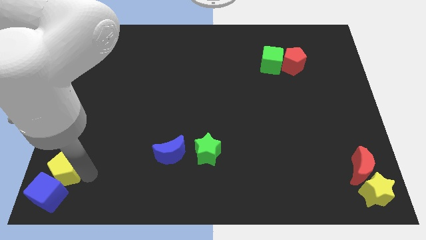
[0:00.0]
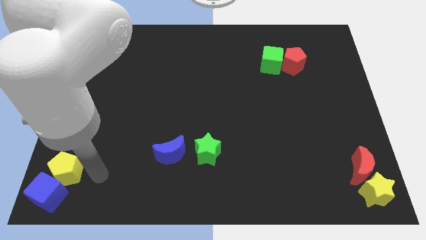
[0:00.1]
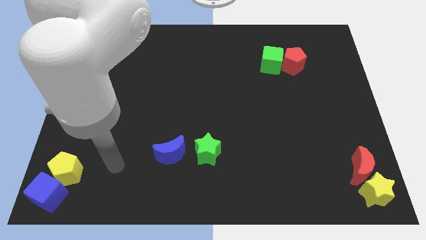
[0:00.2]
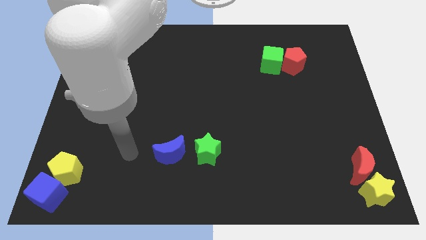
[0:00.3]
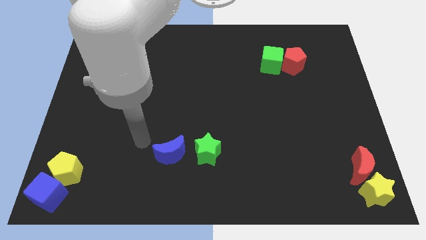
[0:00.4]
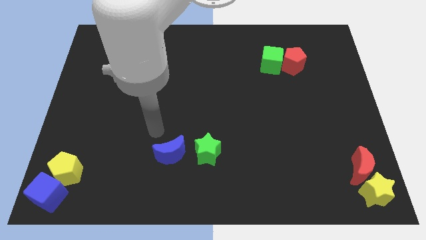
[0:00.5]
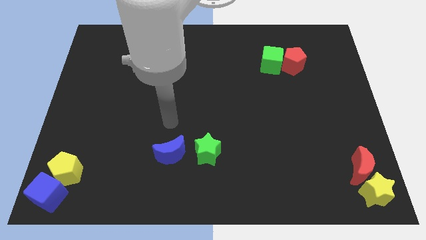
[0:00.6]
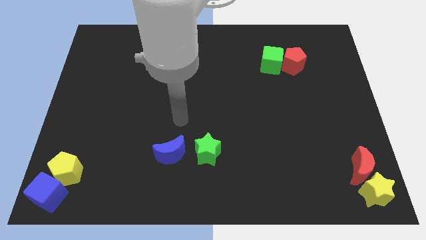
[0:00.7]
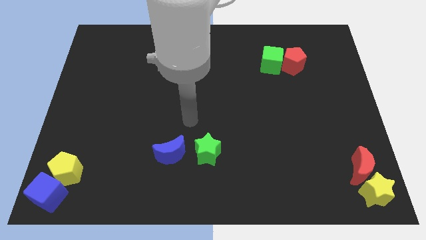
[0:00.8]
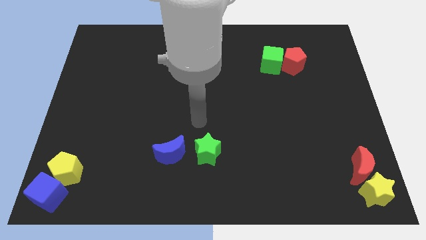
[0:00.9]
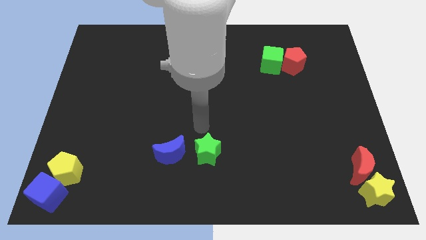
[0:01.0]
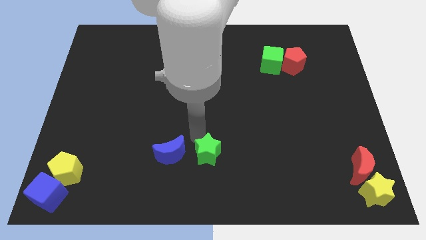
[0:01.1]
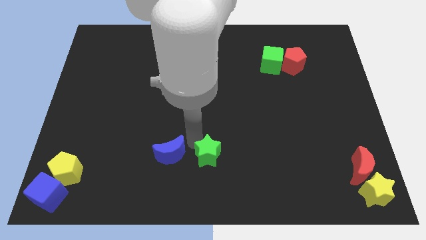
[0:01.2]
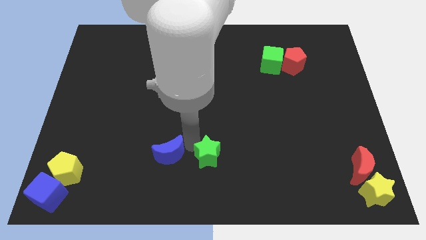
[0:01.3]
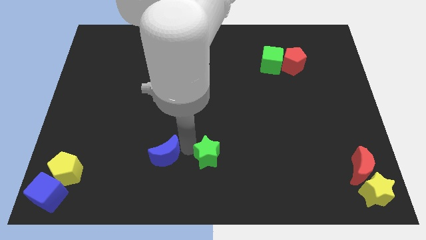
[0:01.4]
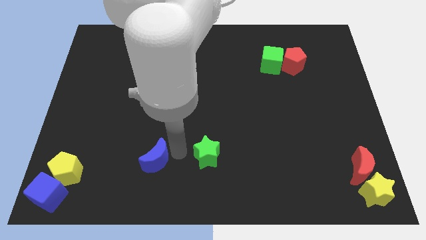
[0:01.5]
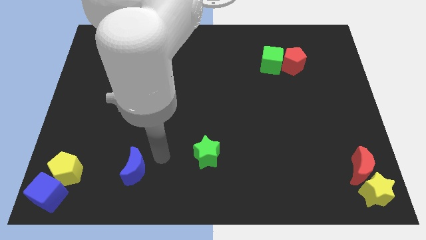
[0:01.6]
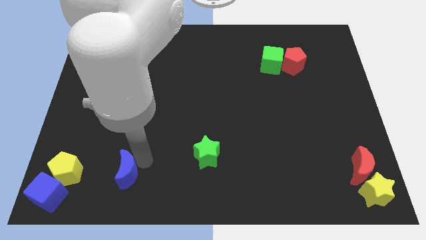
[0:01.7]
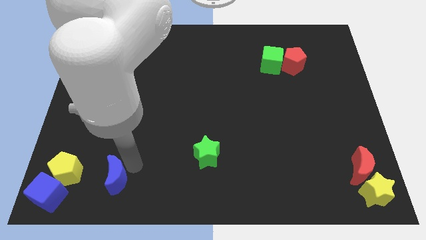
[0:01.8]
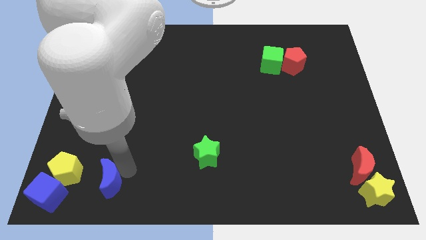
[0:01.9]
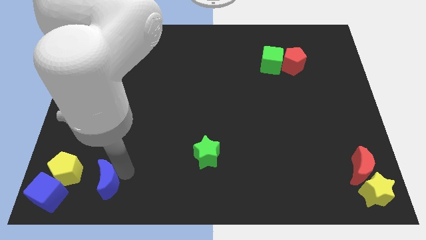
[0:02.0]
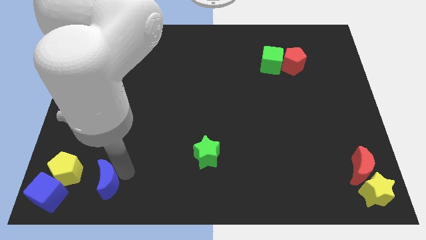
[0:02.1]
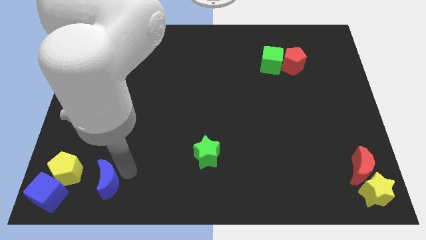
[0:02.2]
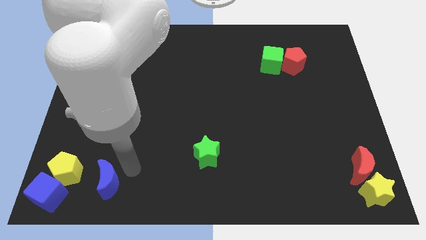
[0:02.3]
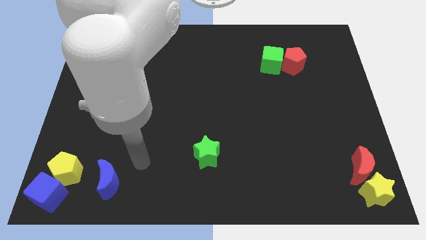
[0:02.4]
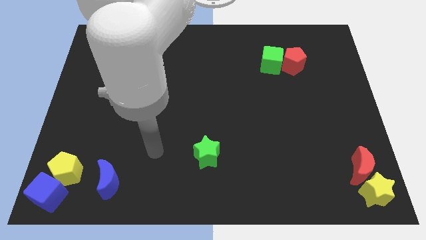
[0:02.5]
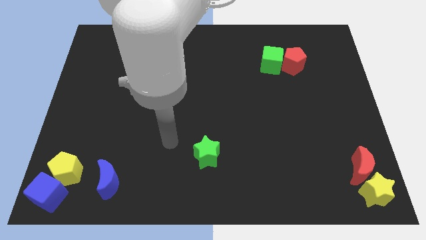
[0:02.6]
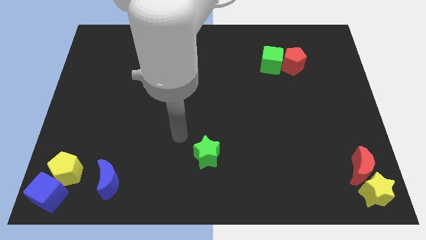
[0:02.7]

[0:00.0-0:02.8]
separate the blue moon to the right of yellow pentagon

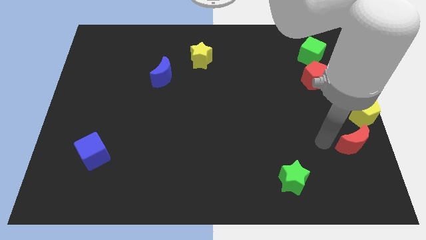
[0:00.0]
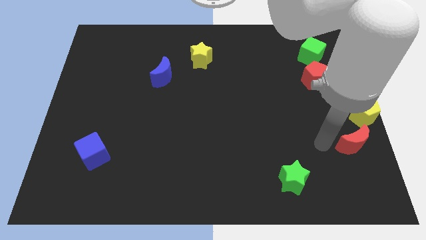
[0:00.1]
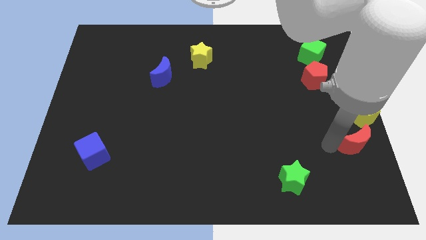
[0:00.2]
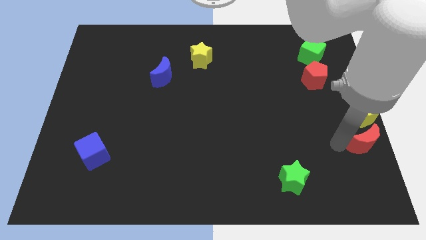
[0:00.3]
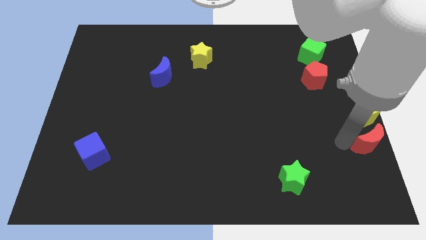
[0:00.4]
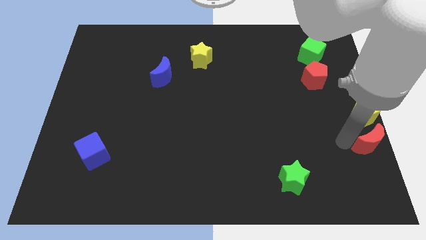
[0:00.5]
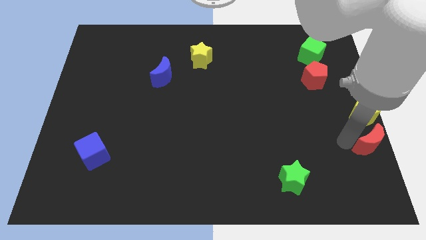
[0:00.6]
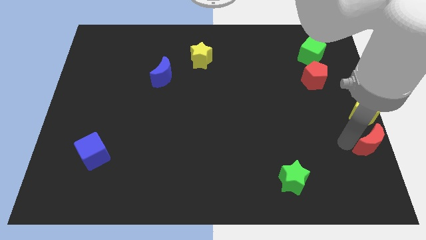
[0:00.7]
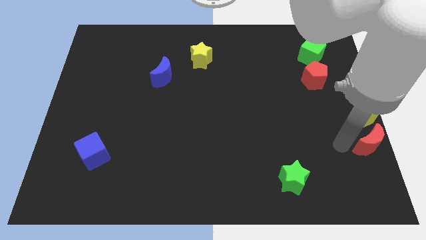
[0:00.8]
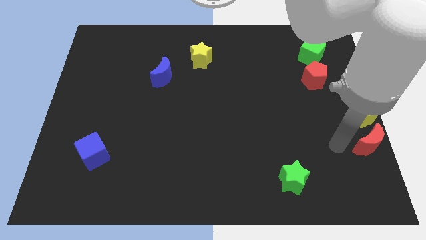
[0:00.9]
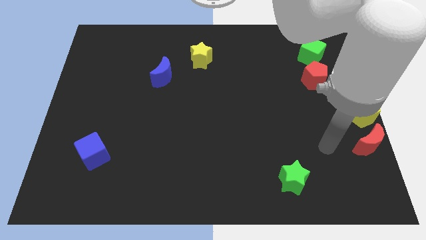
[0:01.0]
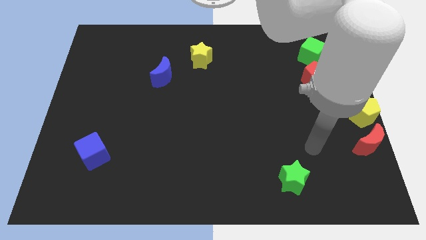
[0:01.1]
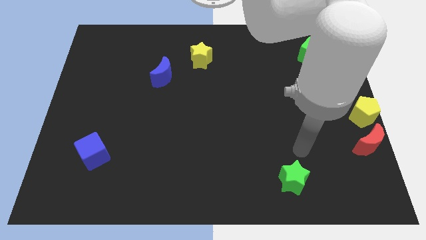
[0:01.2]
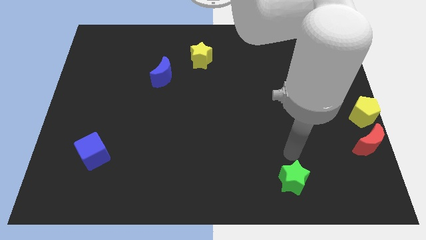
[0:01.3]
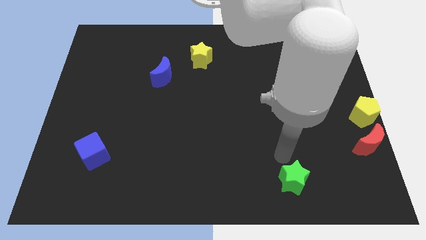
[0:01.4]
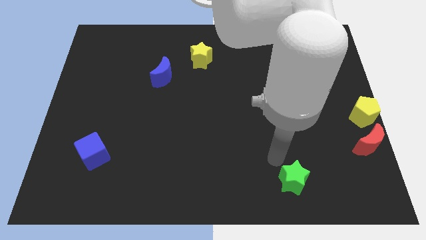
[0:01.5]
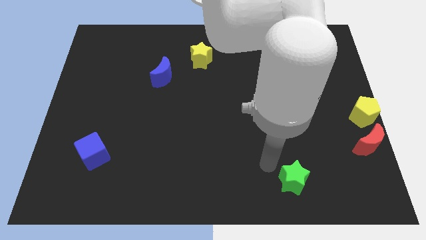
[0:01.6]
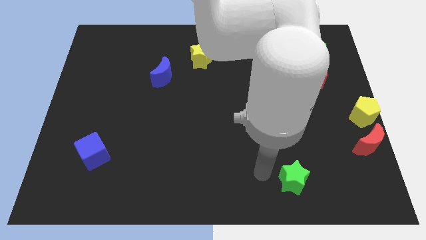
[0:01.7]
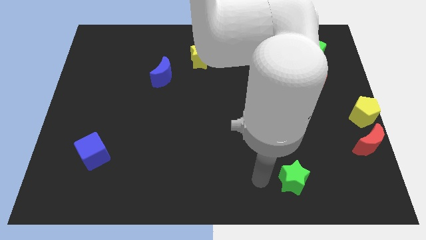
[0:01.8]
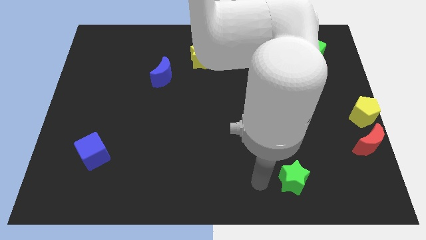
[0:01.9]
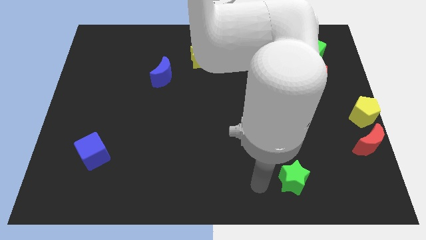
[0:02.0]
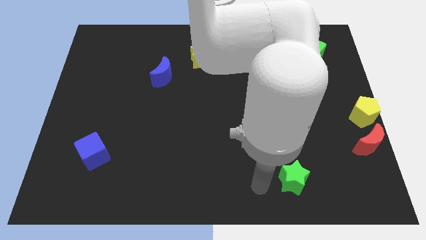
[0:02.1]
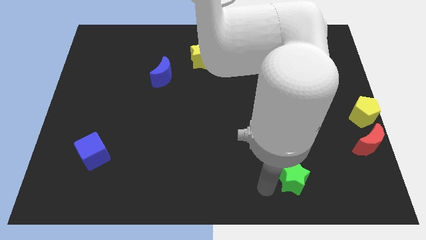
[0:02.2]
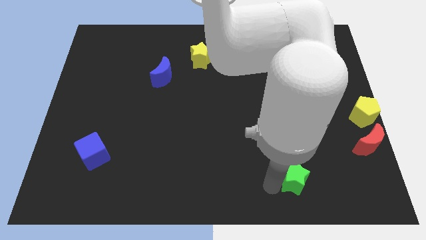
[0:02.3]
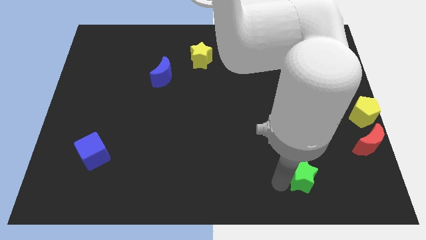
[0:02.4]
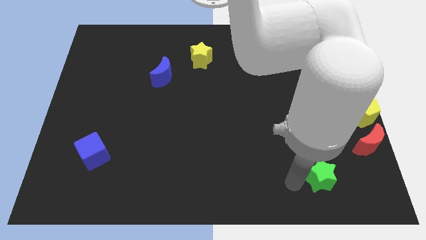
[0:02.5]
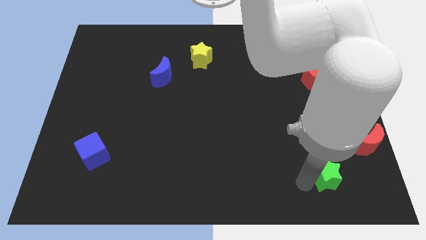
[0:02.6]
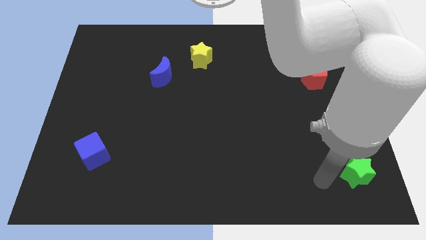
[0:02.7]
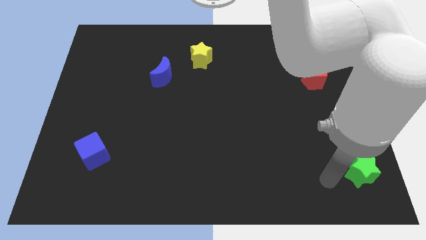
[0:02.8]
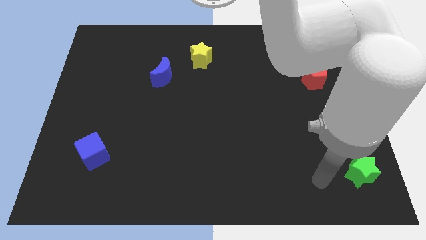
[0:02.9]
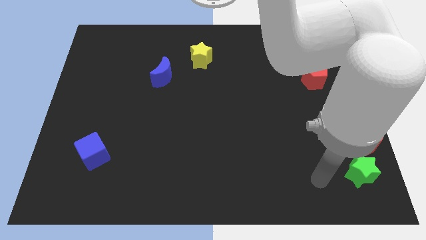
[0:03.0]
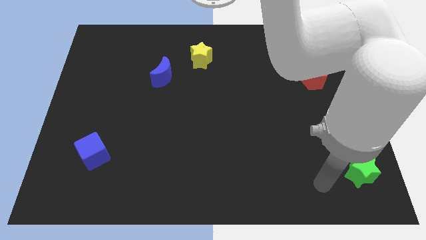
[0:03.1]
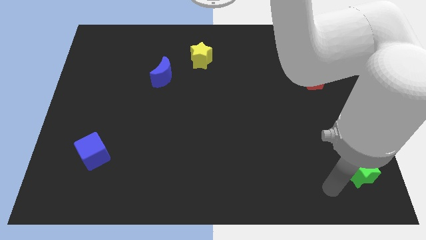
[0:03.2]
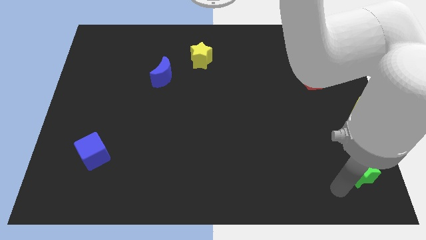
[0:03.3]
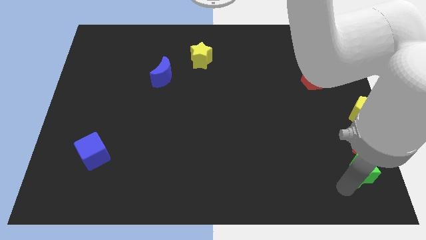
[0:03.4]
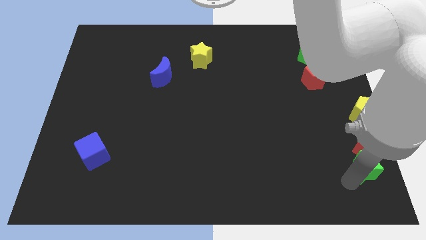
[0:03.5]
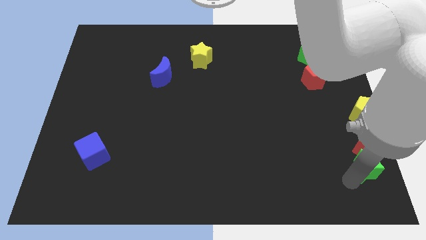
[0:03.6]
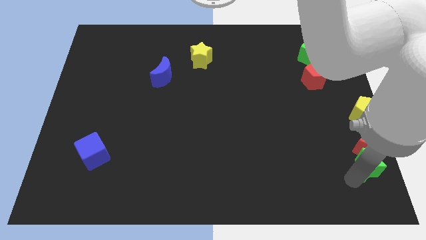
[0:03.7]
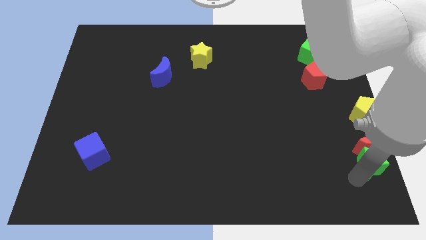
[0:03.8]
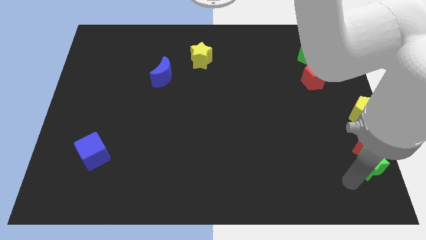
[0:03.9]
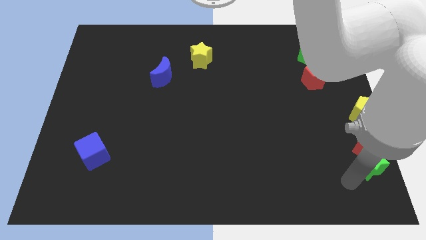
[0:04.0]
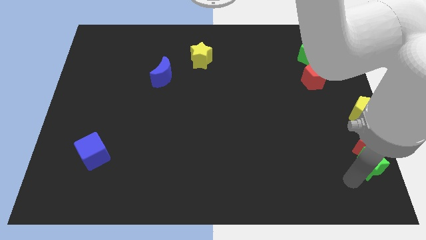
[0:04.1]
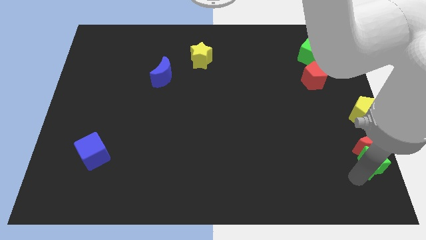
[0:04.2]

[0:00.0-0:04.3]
push the green star into the red crescent

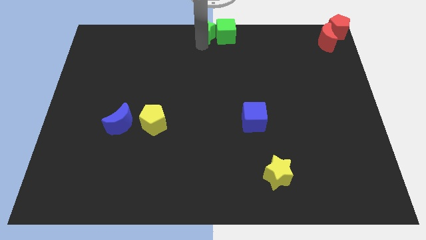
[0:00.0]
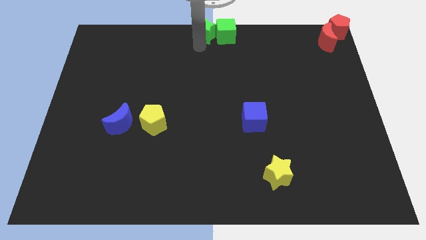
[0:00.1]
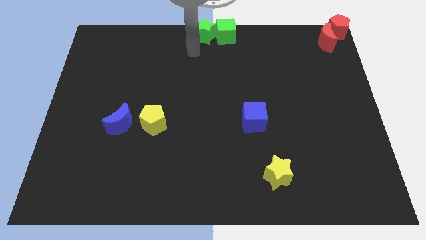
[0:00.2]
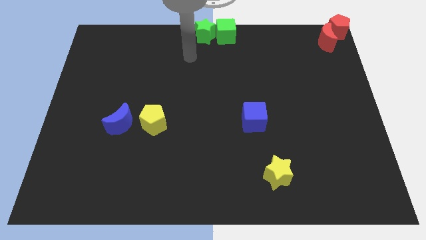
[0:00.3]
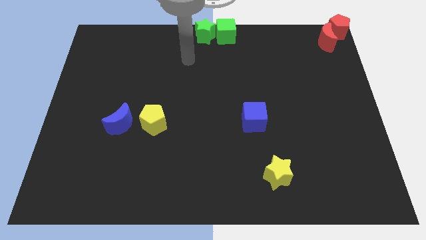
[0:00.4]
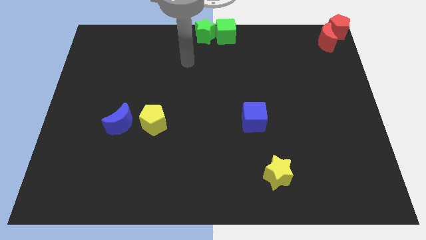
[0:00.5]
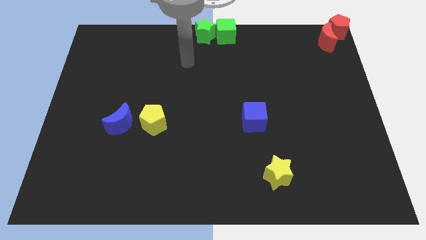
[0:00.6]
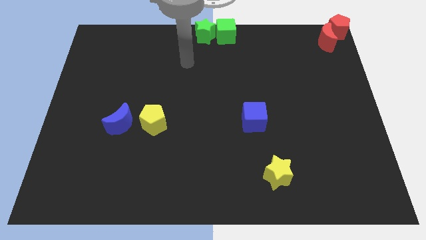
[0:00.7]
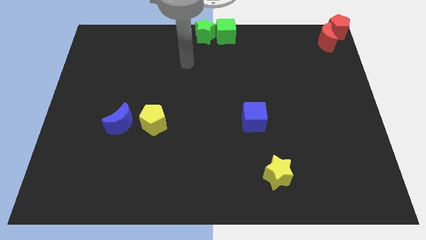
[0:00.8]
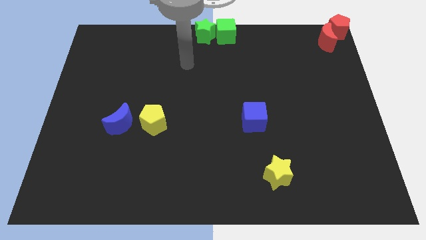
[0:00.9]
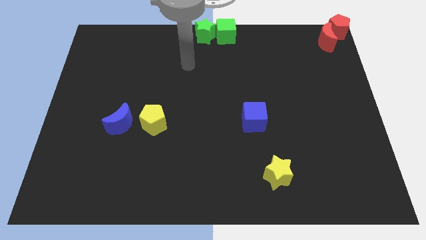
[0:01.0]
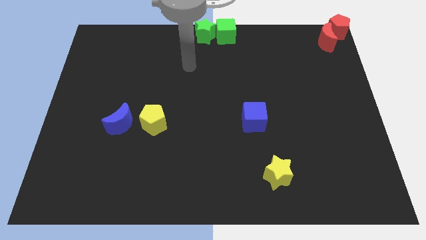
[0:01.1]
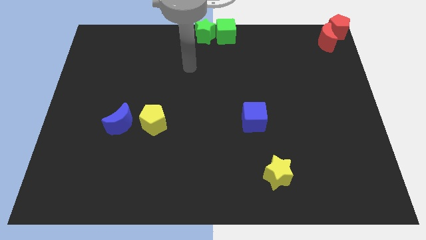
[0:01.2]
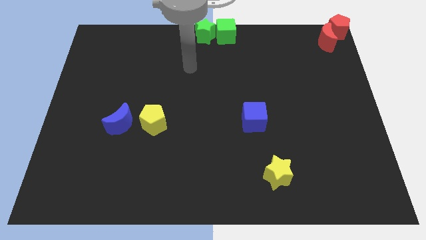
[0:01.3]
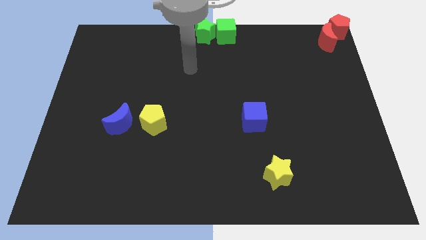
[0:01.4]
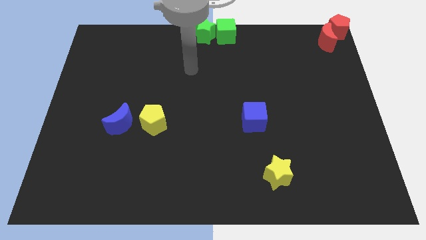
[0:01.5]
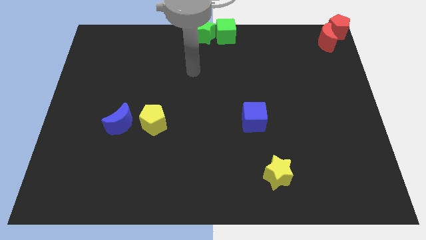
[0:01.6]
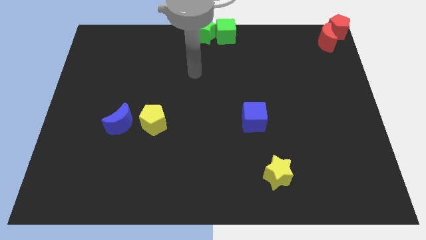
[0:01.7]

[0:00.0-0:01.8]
move your arm away from the green star
